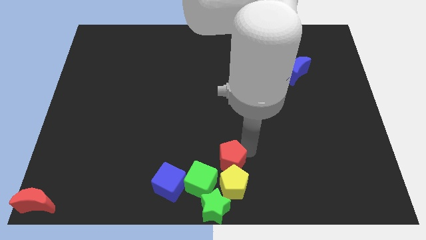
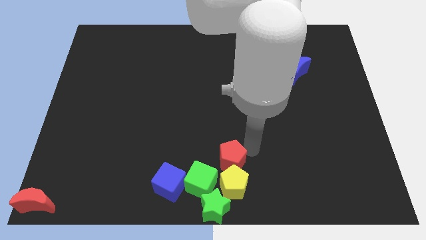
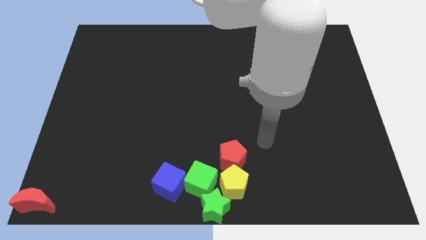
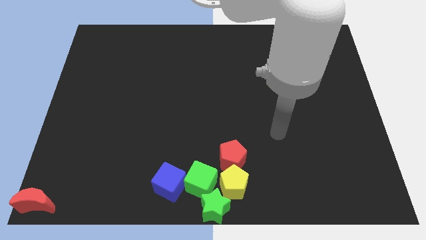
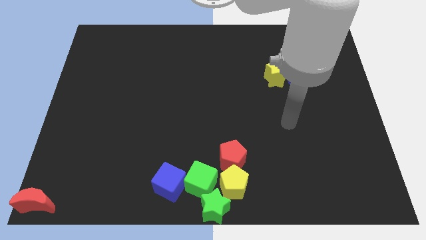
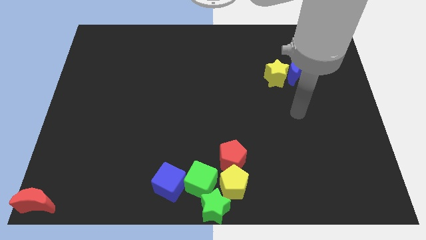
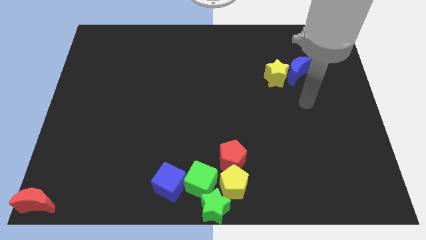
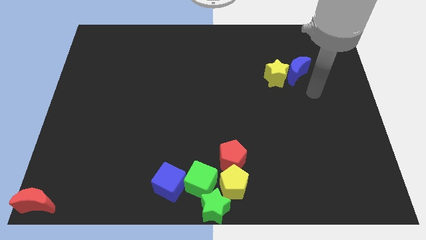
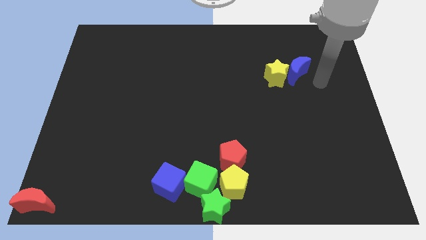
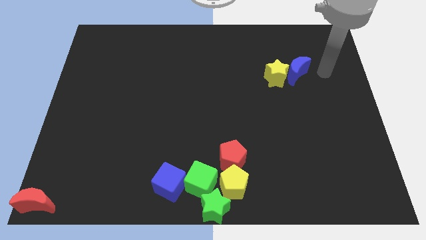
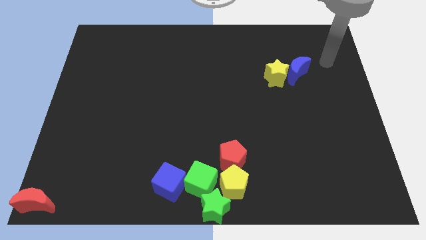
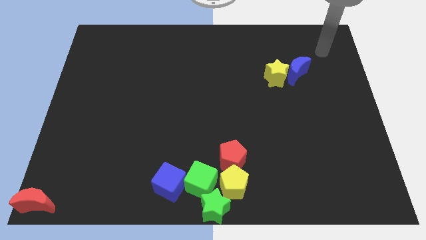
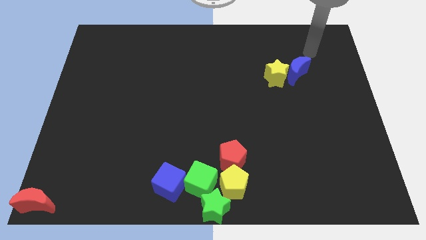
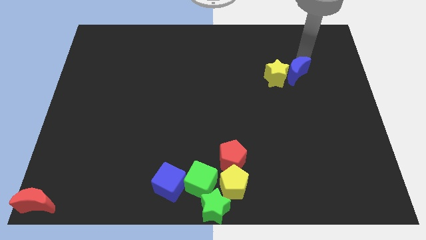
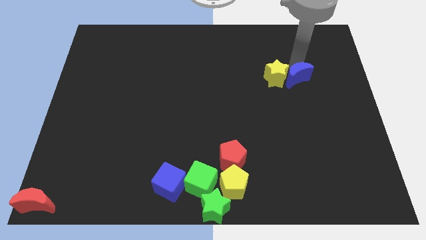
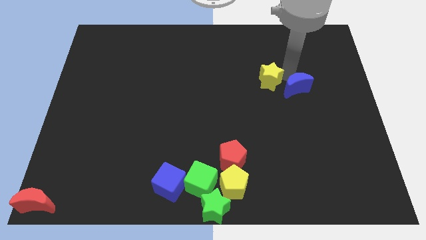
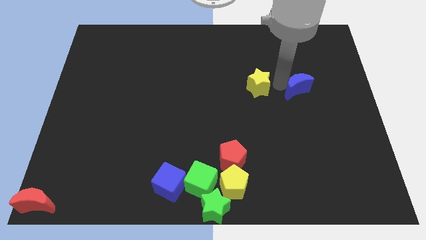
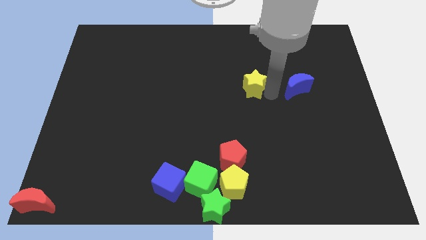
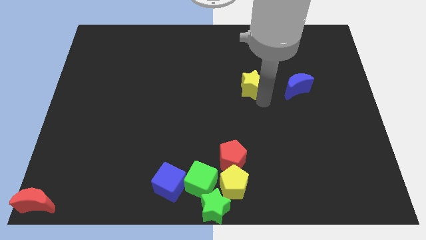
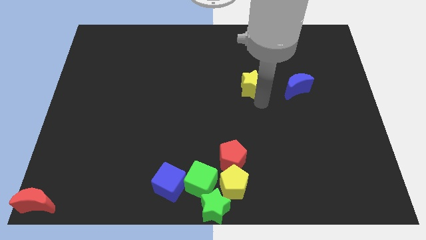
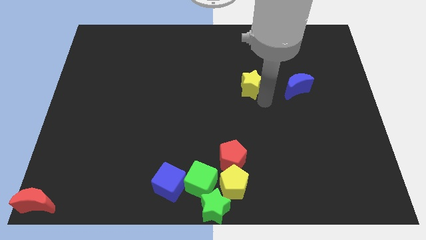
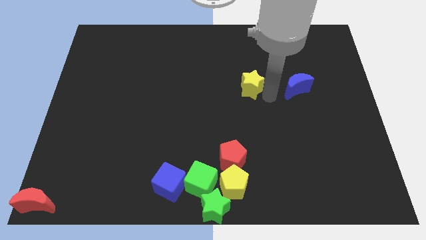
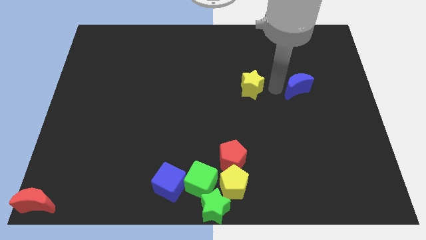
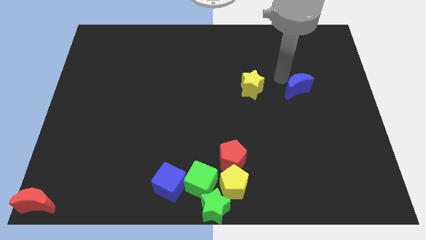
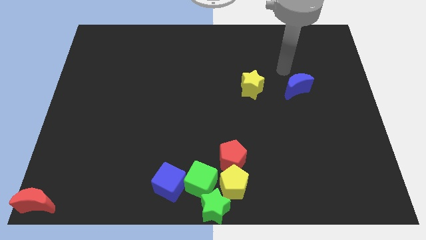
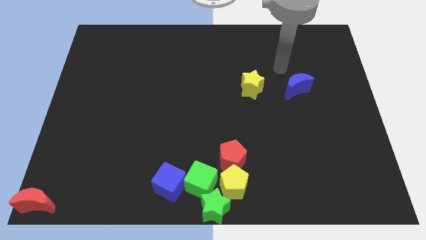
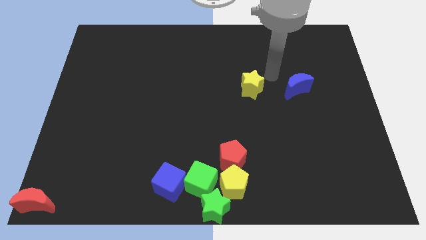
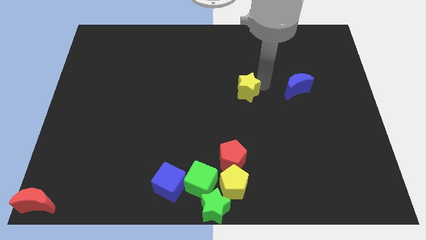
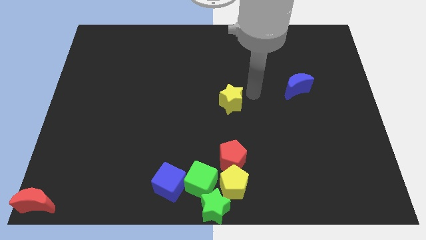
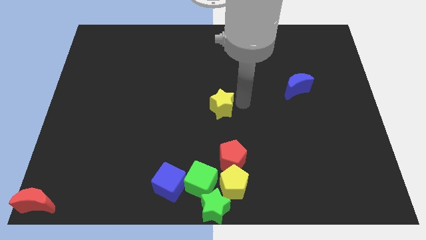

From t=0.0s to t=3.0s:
separate the yellow star from blue moon

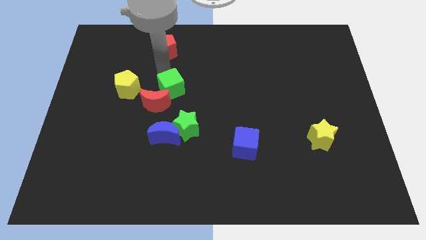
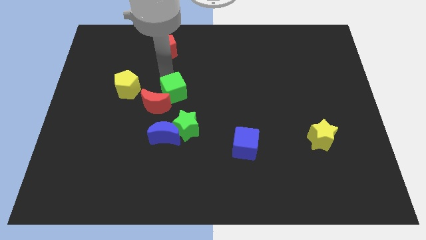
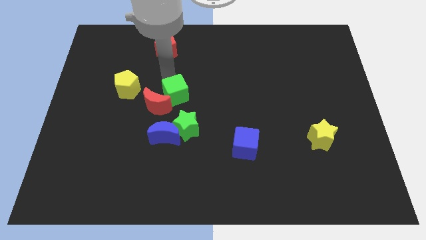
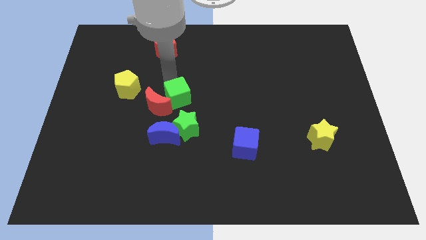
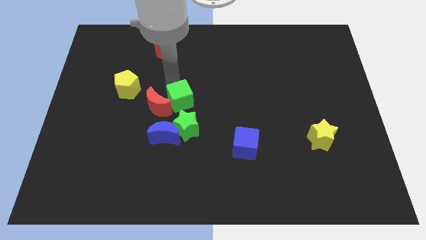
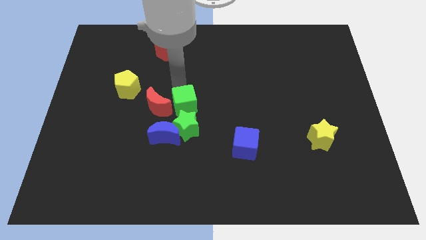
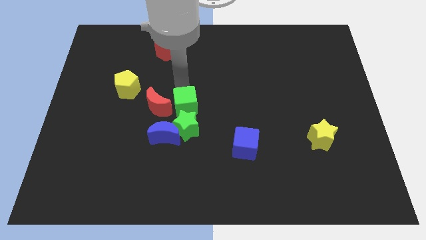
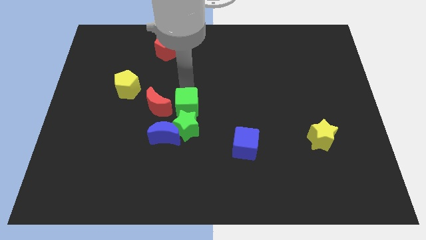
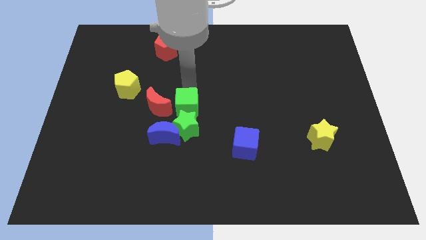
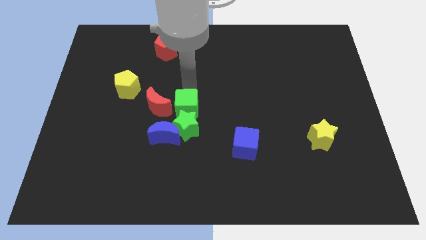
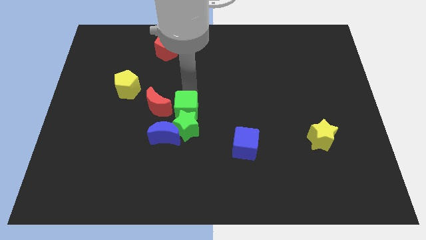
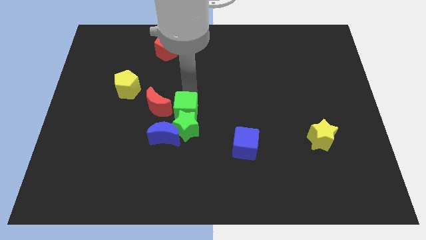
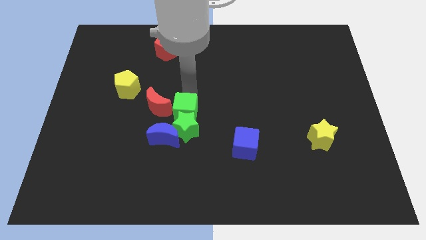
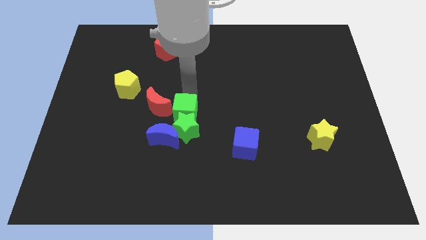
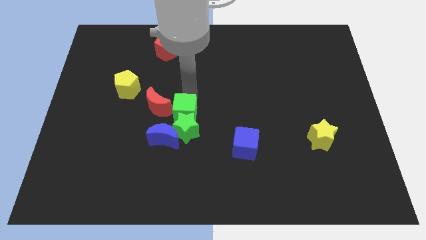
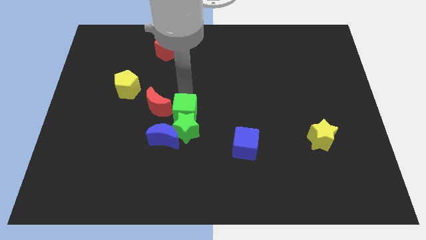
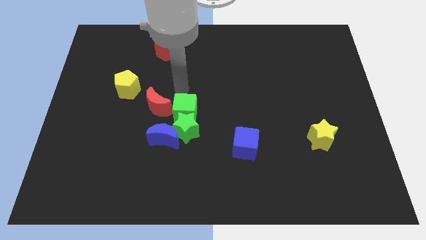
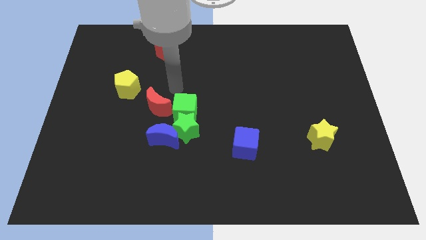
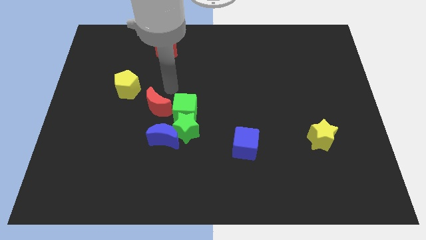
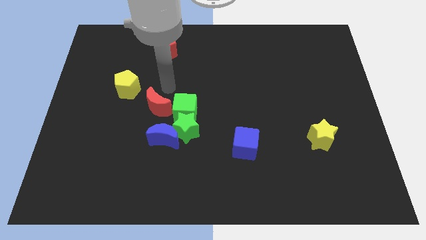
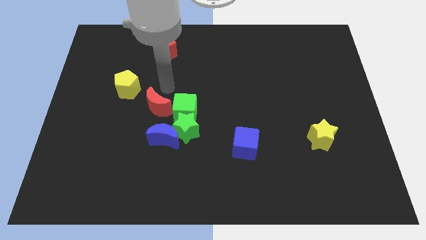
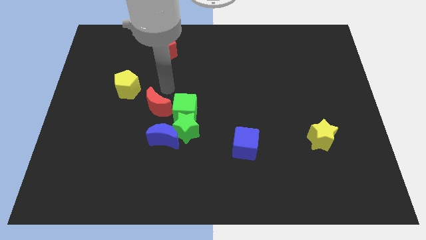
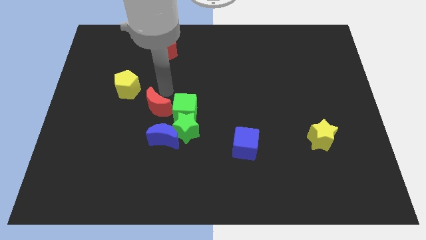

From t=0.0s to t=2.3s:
push the green cube into the green star

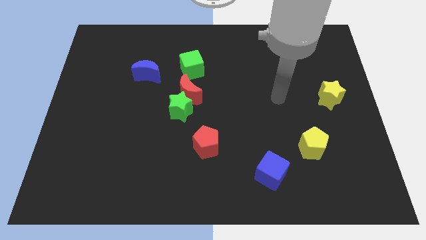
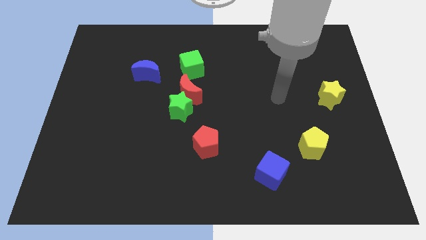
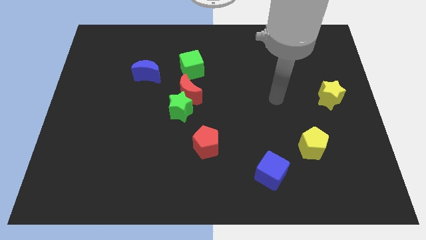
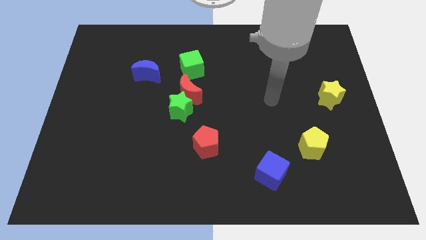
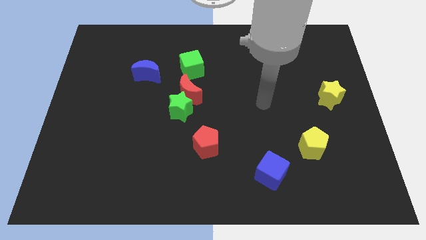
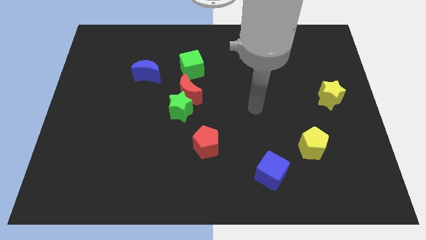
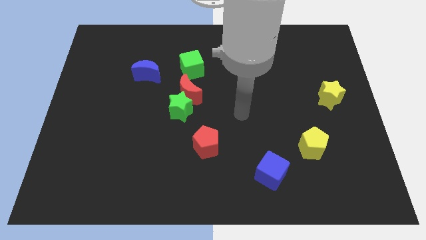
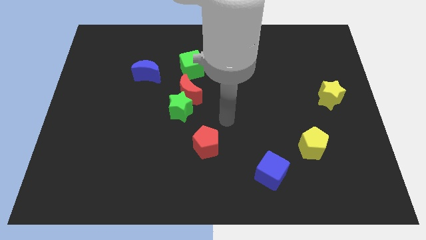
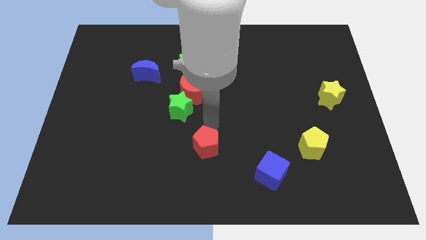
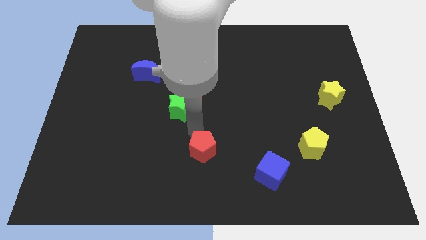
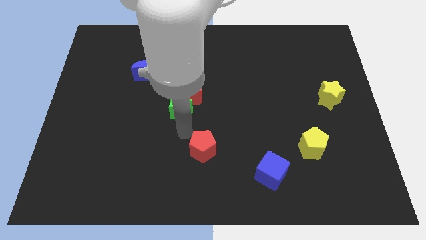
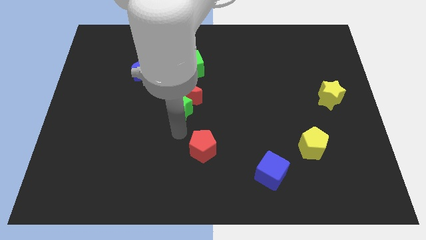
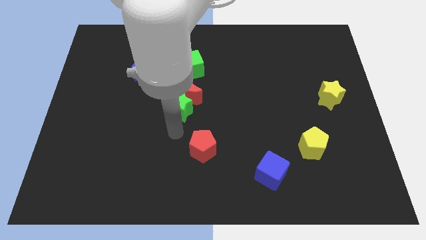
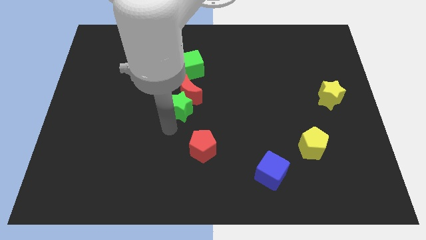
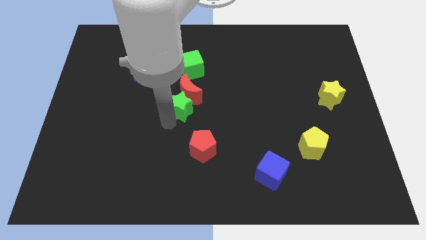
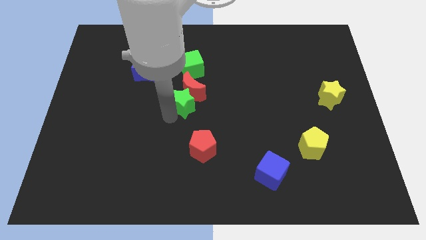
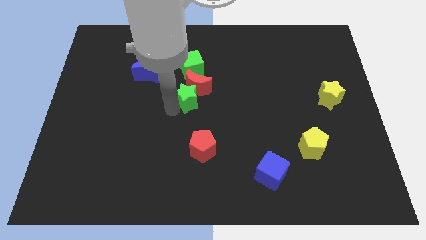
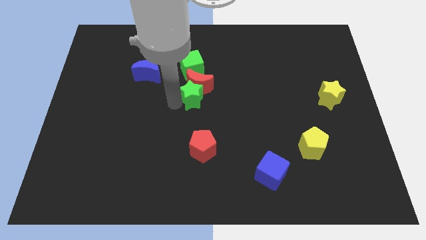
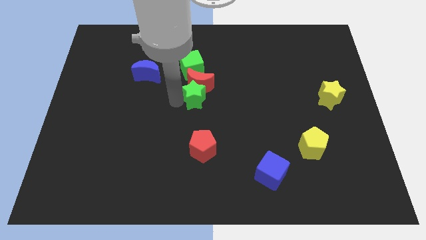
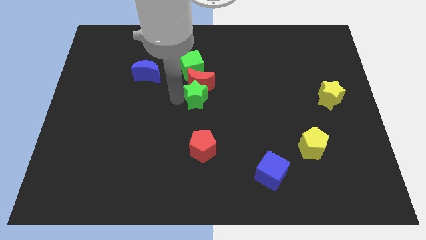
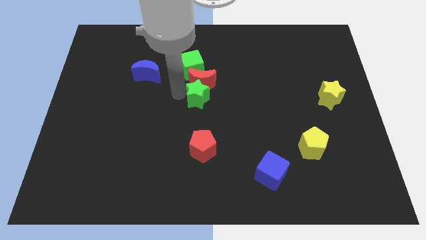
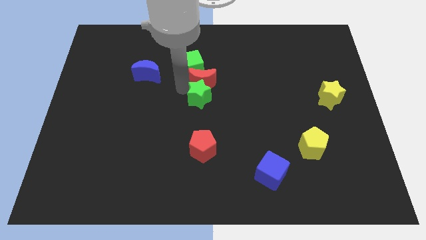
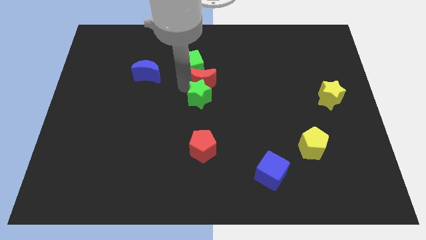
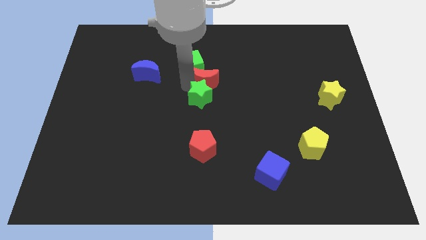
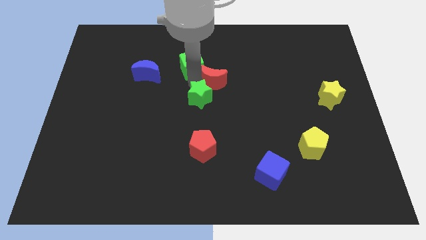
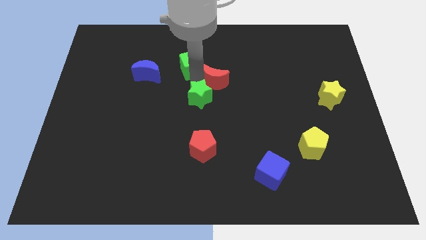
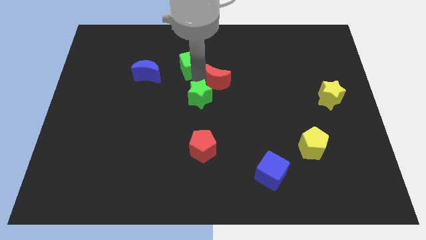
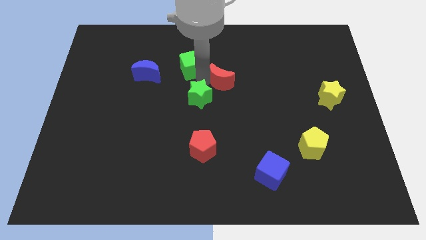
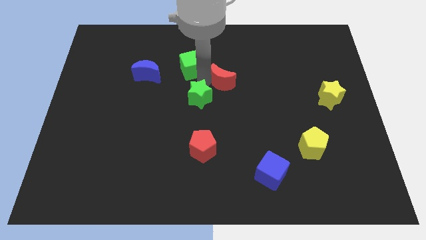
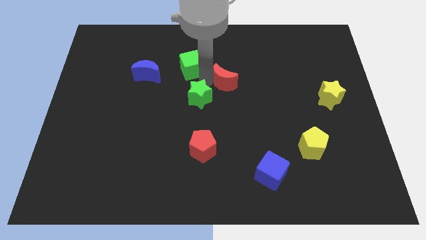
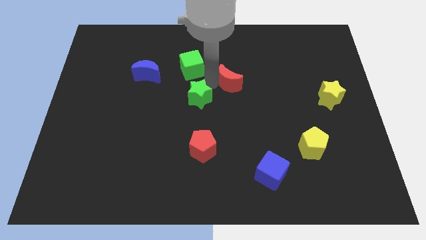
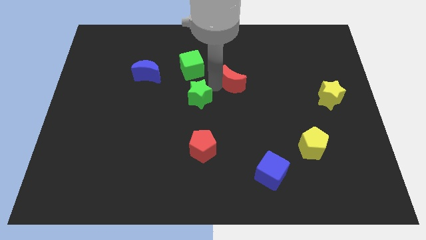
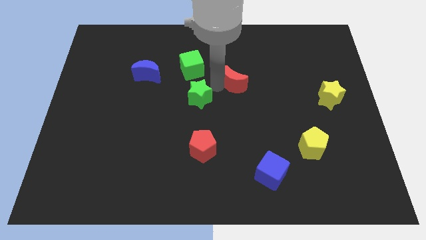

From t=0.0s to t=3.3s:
push the red crescent diagonally to the top right side of the red pentagon

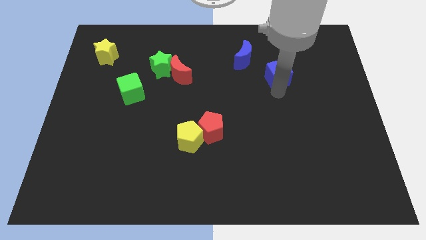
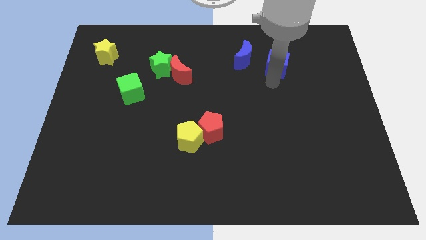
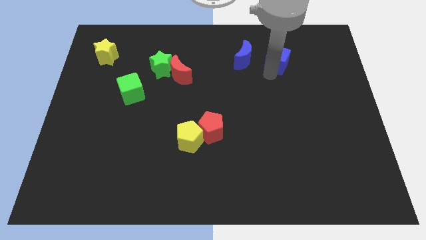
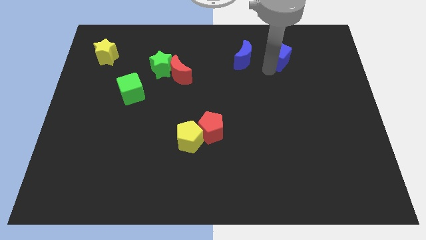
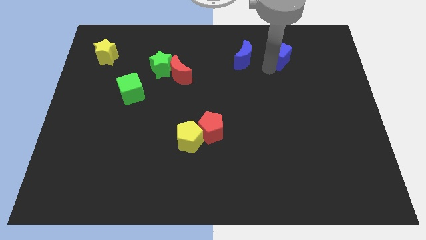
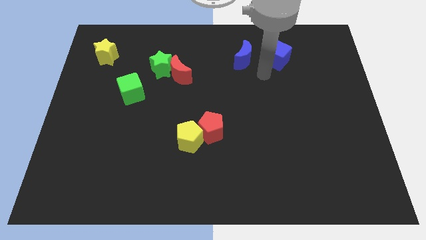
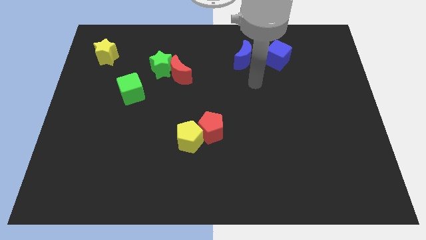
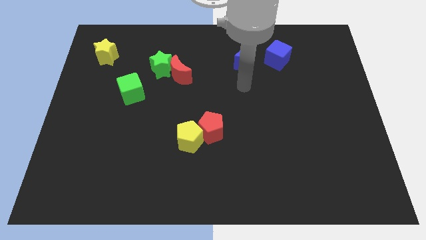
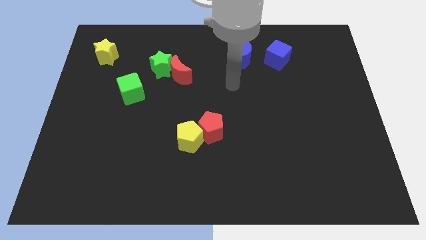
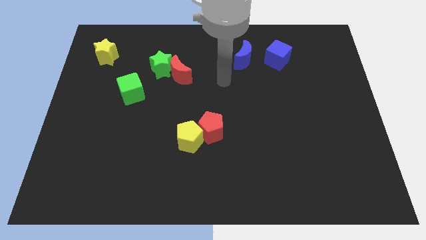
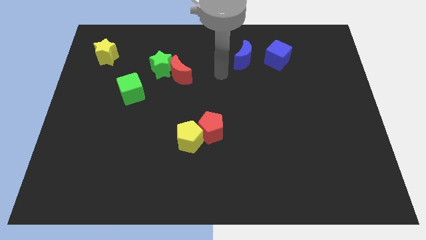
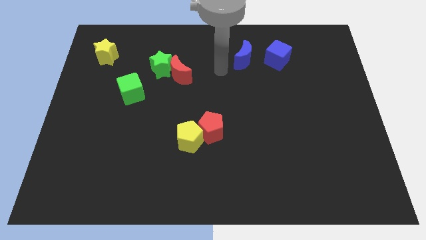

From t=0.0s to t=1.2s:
move the blue cube right beside the blue crescent
